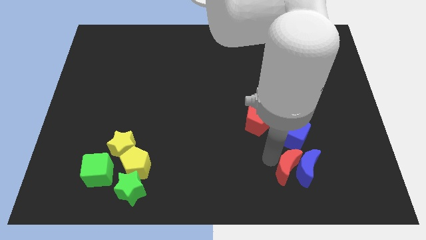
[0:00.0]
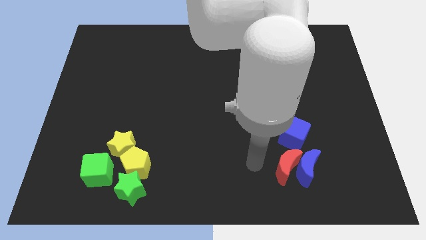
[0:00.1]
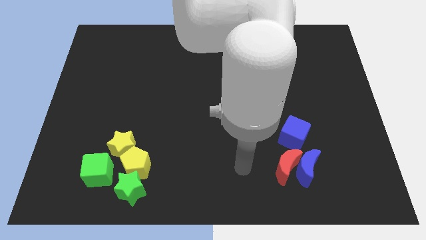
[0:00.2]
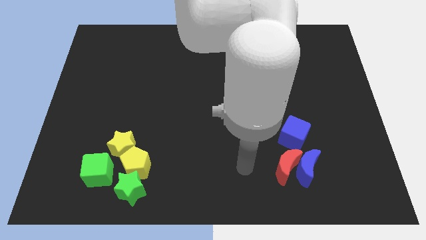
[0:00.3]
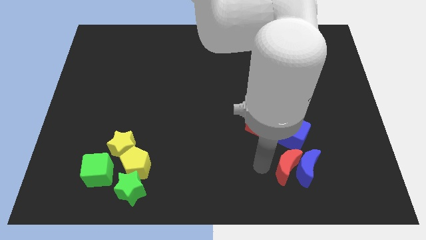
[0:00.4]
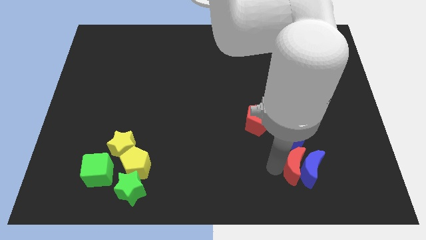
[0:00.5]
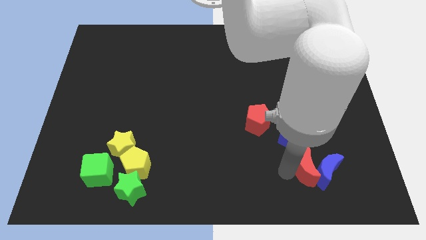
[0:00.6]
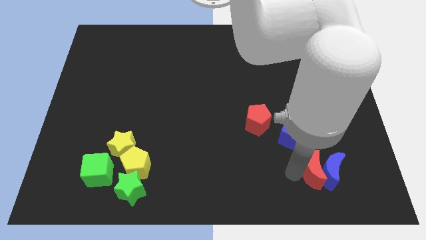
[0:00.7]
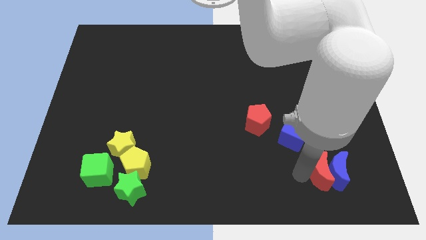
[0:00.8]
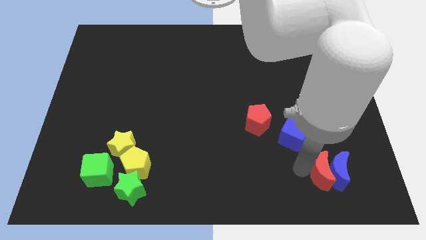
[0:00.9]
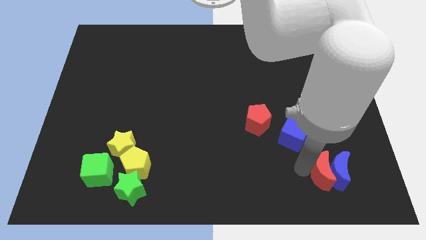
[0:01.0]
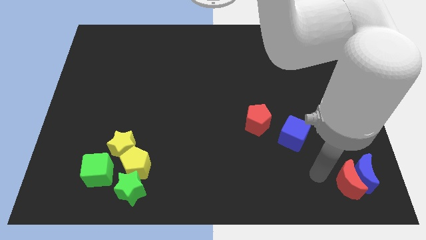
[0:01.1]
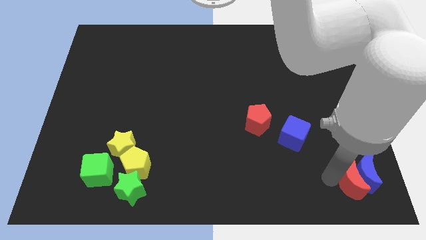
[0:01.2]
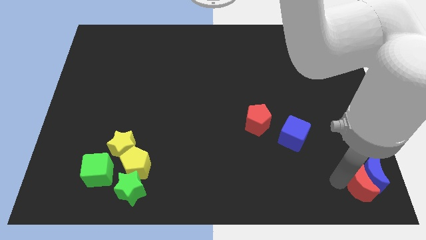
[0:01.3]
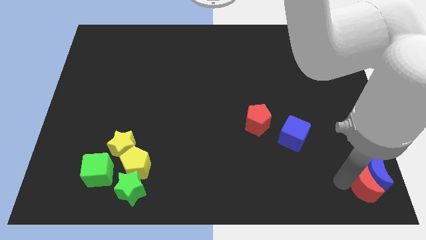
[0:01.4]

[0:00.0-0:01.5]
push the red moon into the blue moon

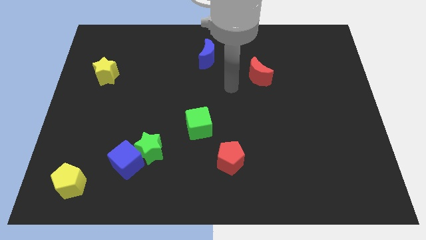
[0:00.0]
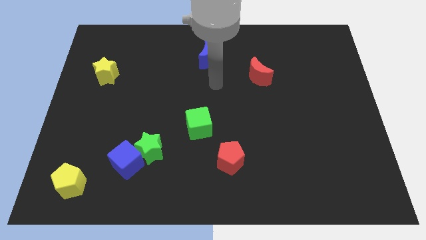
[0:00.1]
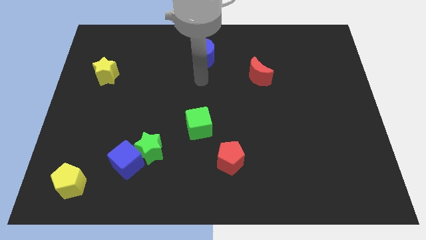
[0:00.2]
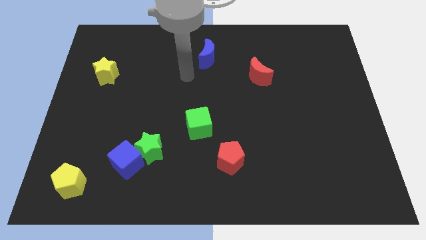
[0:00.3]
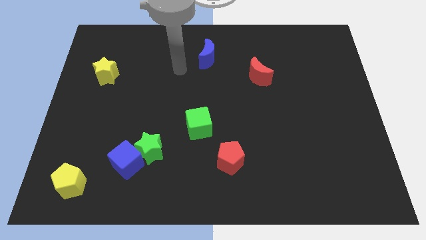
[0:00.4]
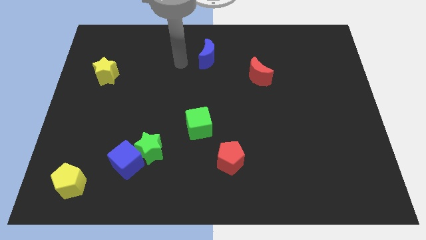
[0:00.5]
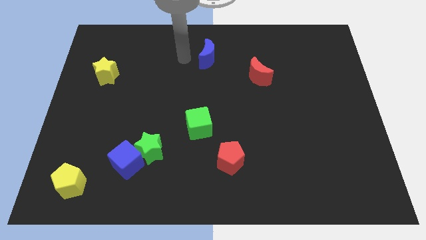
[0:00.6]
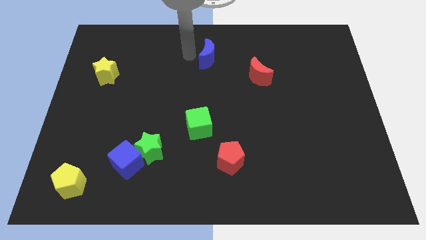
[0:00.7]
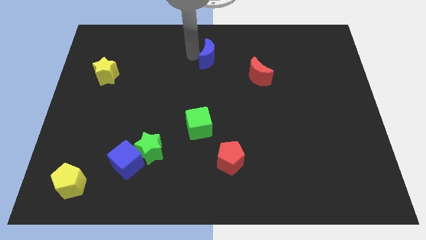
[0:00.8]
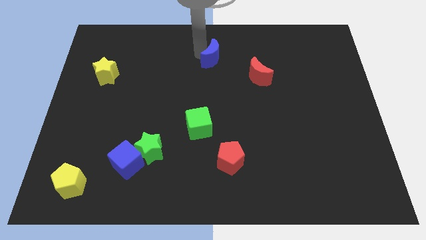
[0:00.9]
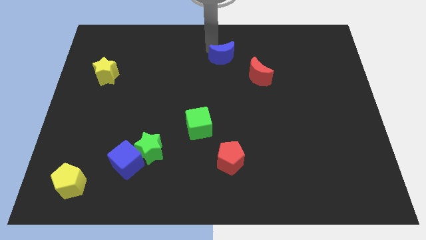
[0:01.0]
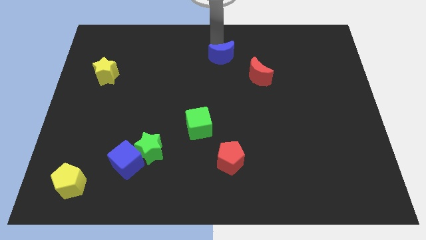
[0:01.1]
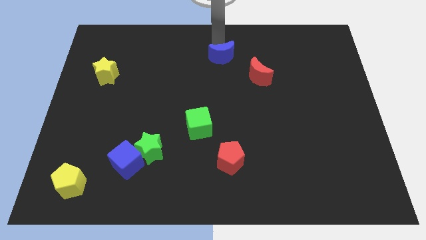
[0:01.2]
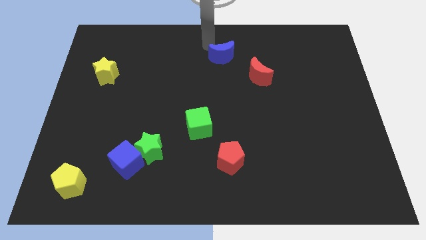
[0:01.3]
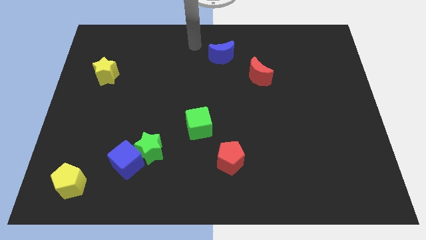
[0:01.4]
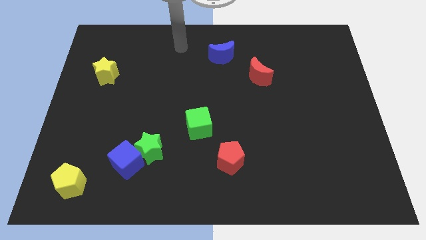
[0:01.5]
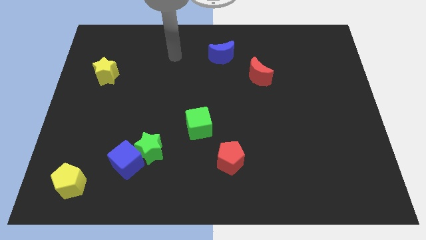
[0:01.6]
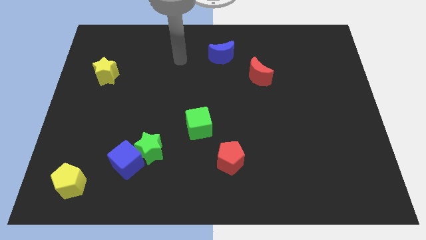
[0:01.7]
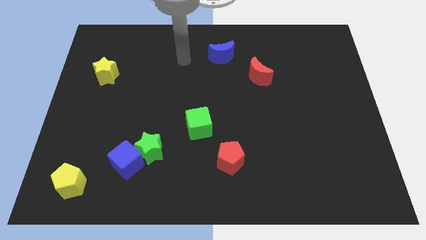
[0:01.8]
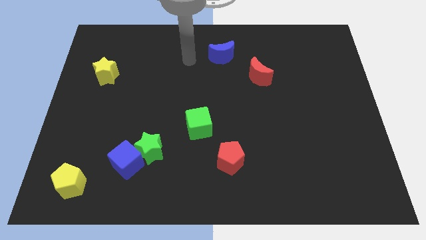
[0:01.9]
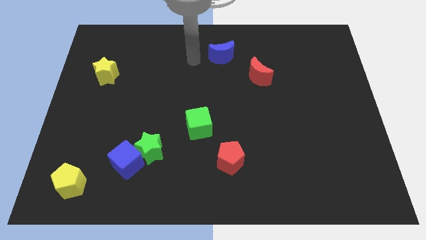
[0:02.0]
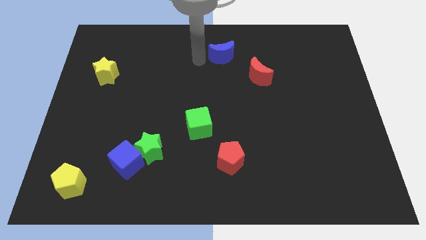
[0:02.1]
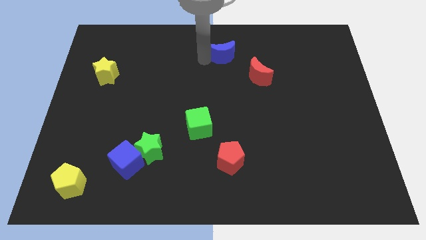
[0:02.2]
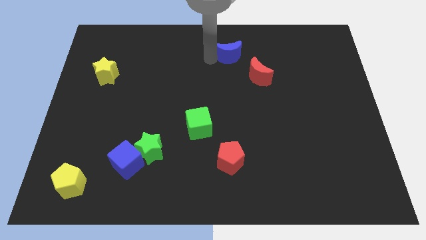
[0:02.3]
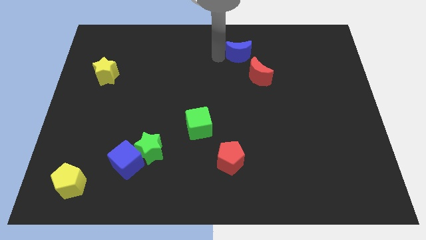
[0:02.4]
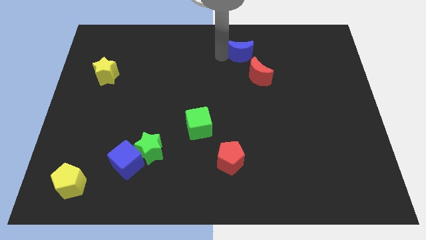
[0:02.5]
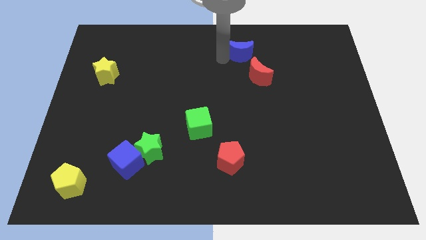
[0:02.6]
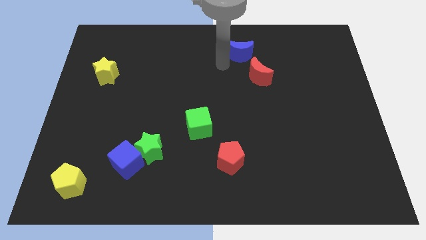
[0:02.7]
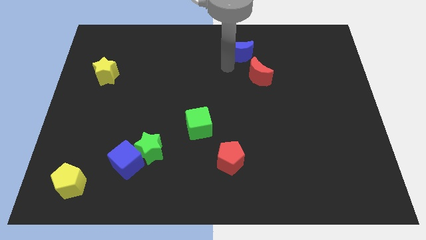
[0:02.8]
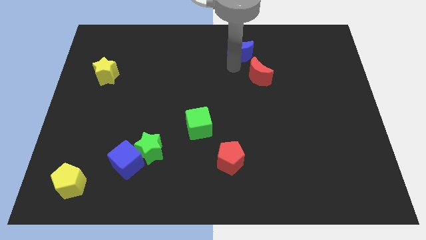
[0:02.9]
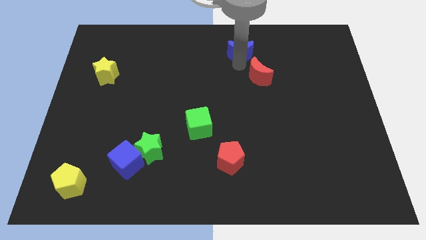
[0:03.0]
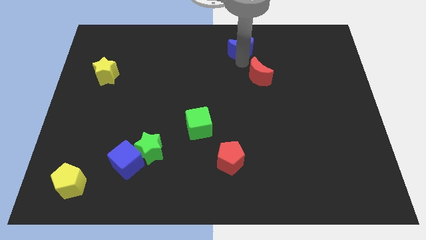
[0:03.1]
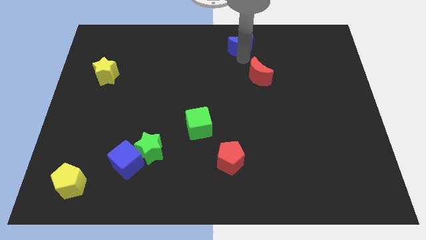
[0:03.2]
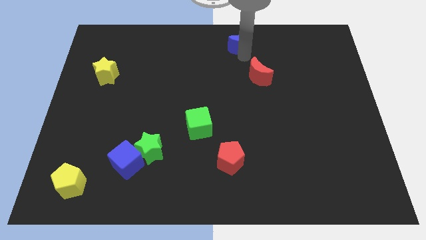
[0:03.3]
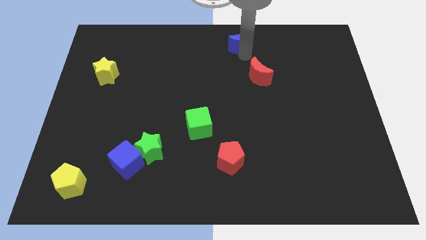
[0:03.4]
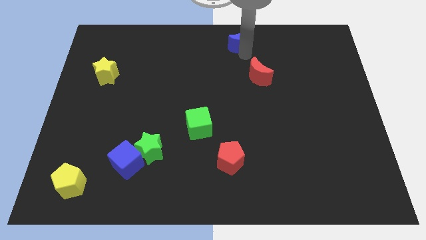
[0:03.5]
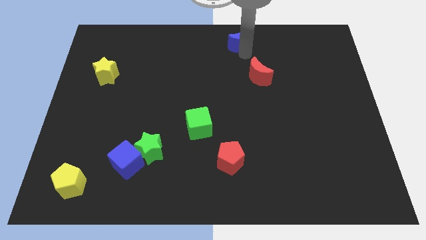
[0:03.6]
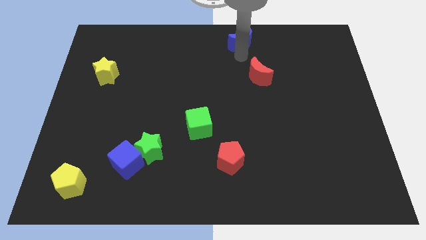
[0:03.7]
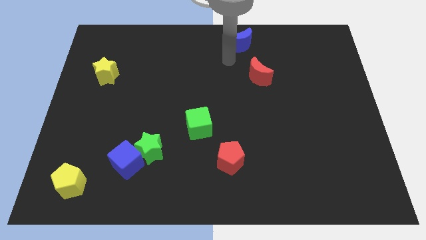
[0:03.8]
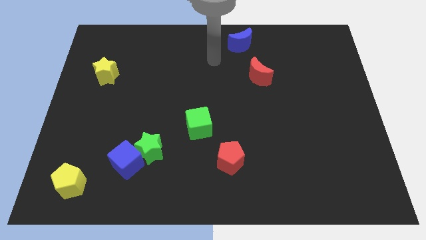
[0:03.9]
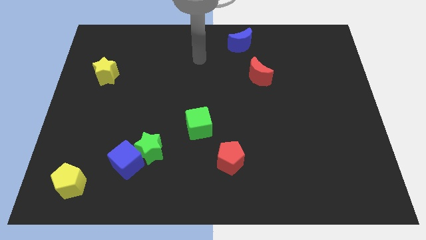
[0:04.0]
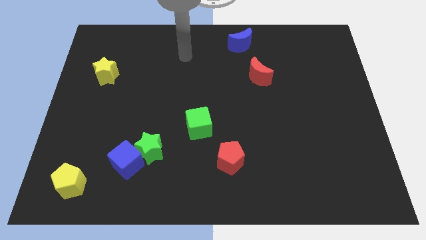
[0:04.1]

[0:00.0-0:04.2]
slide the blue crescent towards the top left side of the red crescent

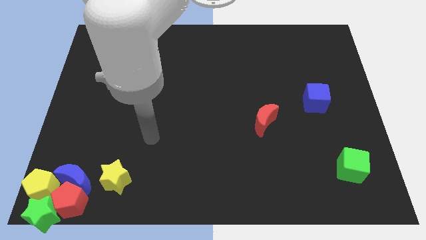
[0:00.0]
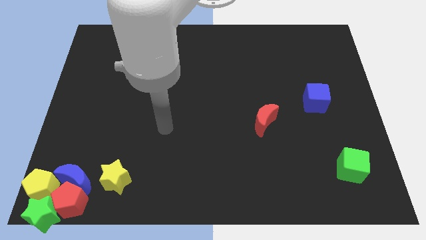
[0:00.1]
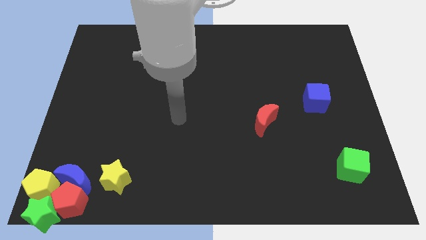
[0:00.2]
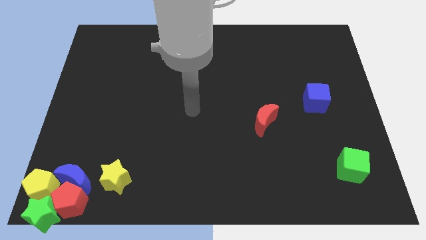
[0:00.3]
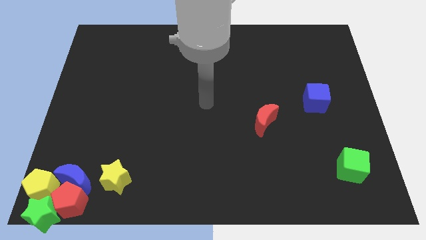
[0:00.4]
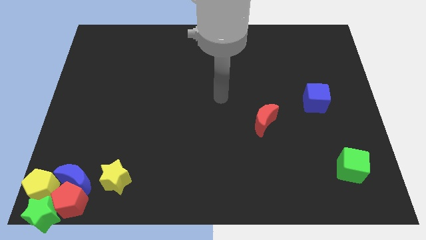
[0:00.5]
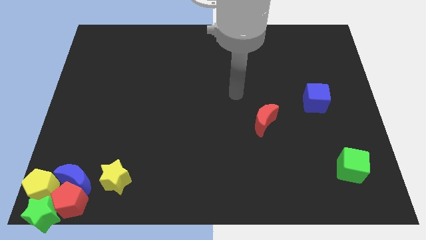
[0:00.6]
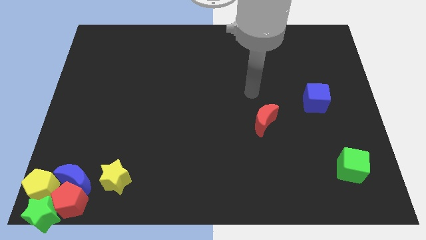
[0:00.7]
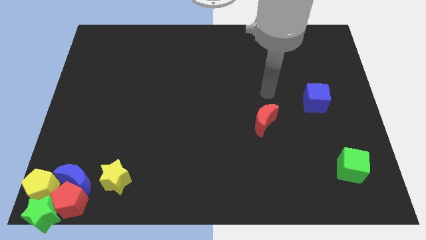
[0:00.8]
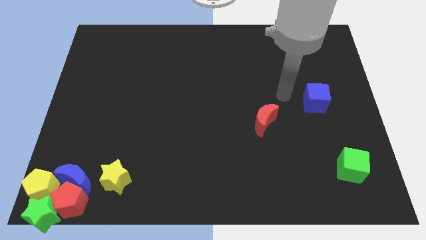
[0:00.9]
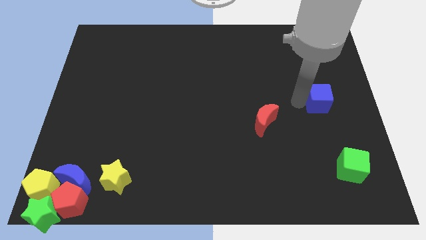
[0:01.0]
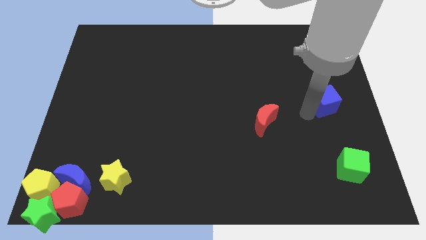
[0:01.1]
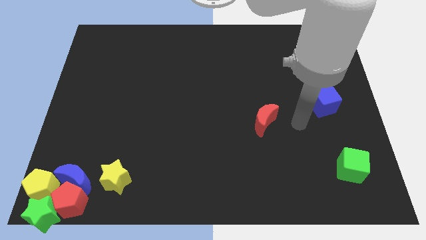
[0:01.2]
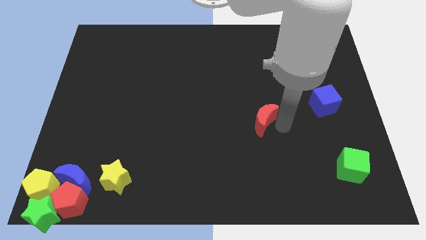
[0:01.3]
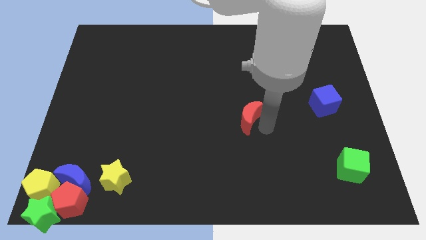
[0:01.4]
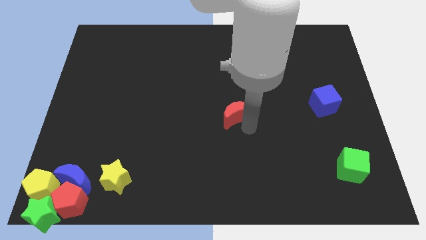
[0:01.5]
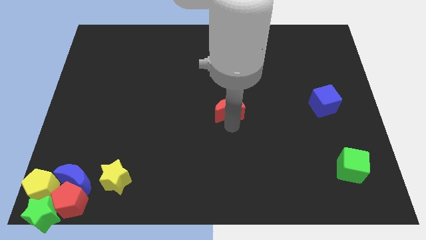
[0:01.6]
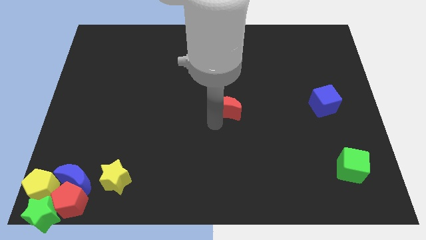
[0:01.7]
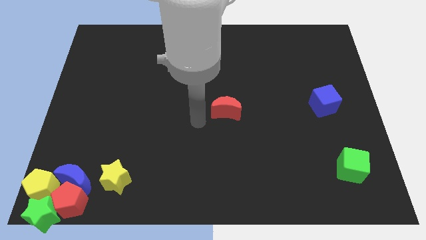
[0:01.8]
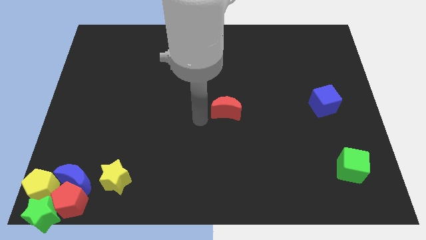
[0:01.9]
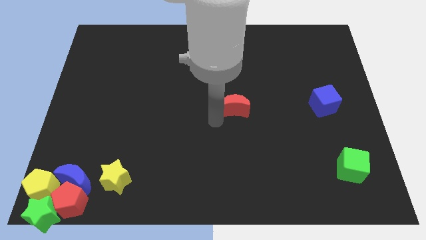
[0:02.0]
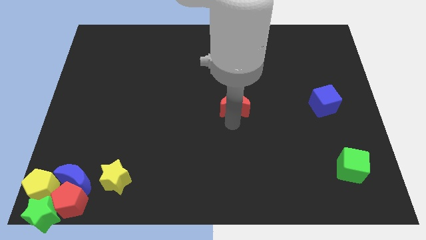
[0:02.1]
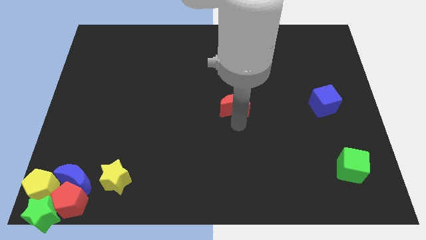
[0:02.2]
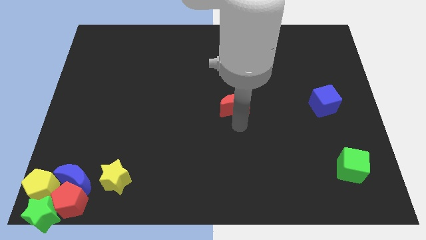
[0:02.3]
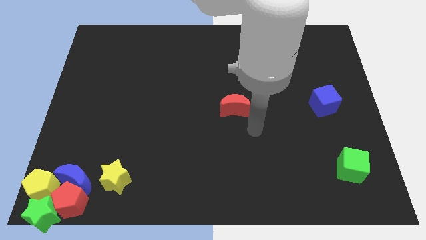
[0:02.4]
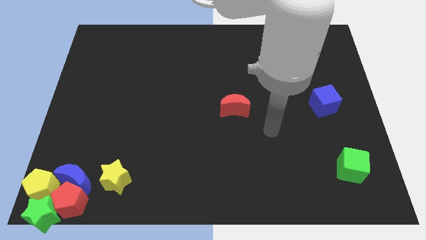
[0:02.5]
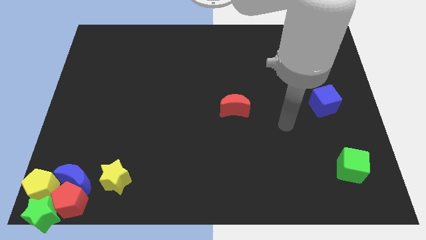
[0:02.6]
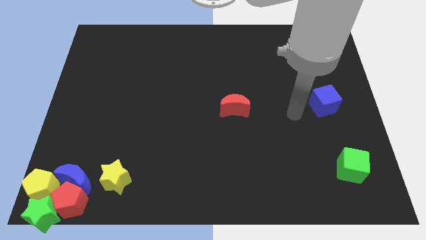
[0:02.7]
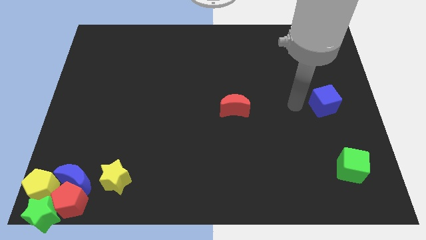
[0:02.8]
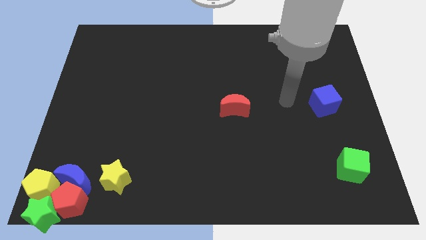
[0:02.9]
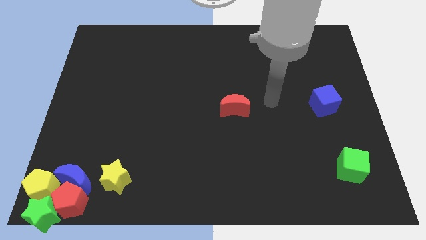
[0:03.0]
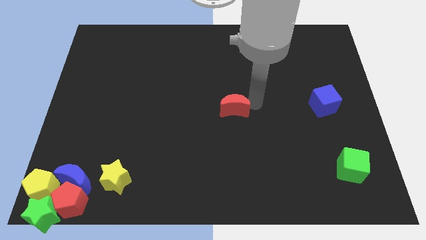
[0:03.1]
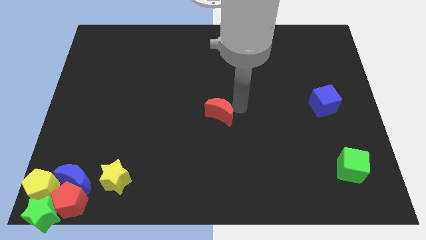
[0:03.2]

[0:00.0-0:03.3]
move the red moon near to the center

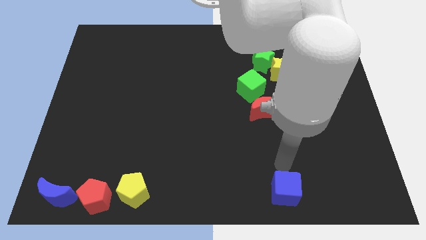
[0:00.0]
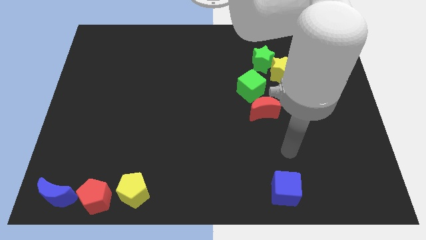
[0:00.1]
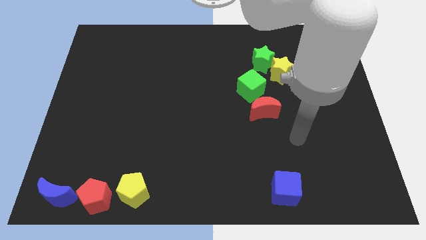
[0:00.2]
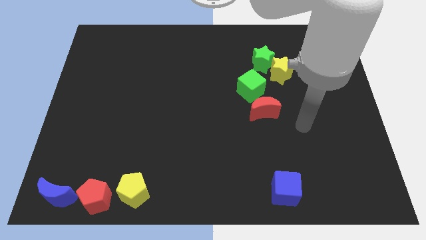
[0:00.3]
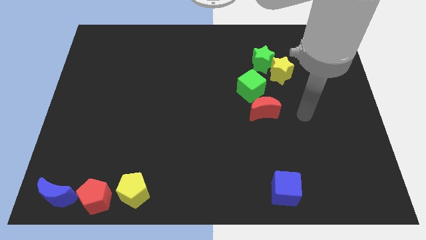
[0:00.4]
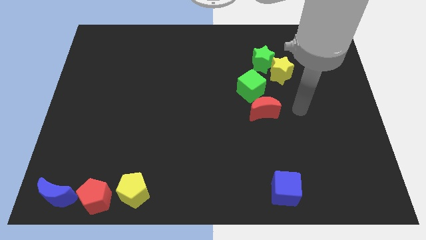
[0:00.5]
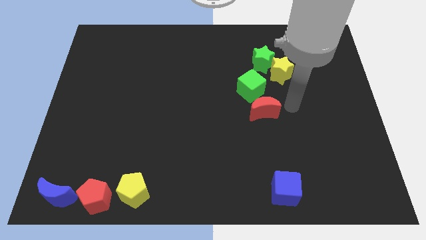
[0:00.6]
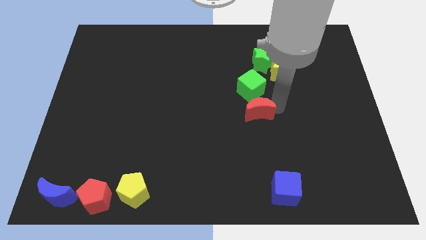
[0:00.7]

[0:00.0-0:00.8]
move your arm to the right of the red crescent
